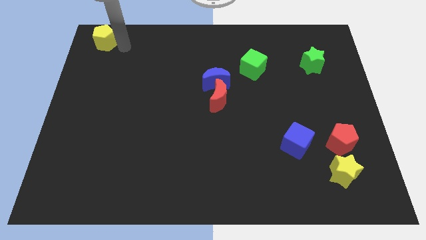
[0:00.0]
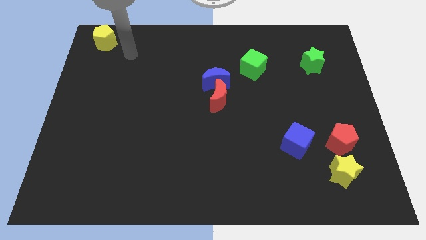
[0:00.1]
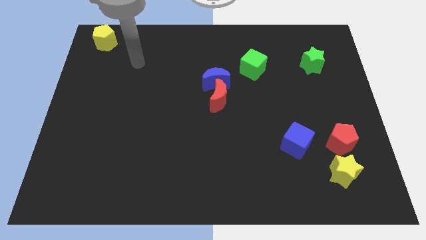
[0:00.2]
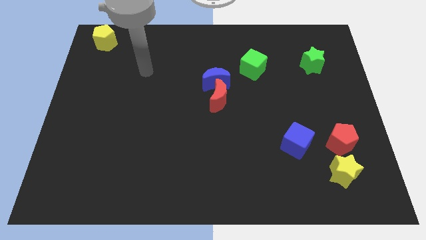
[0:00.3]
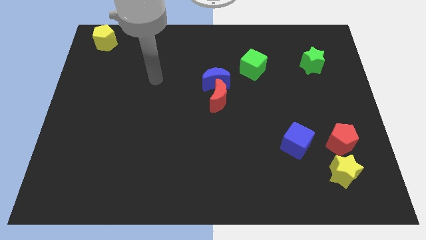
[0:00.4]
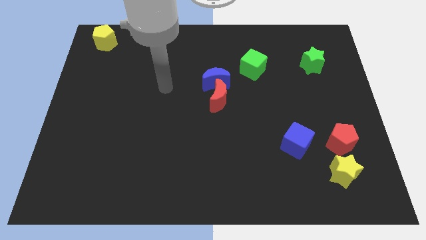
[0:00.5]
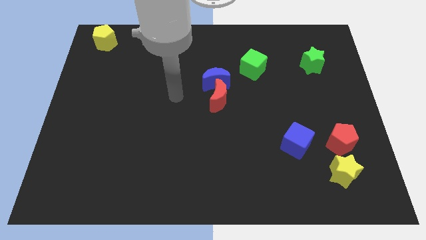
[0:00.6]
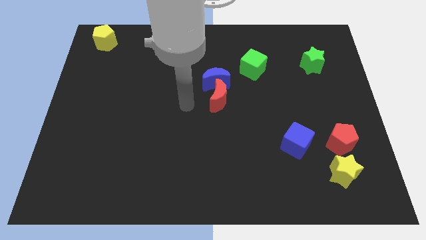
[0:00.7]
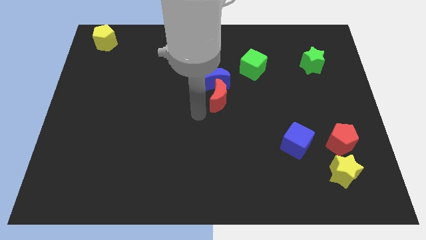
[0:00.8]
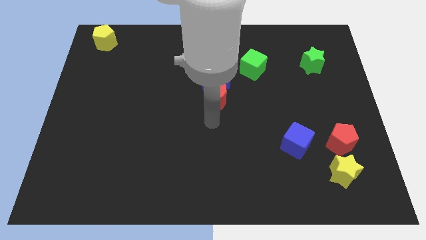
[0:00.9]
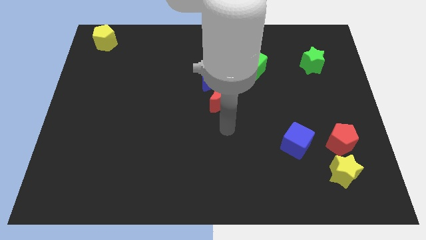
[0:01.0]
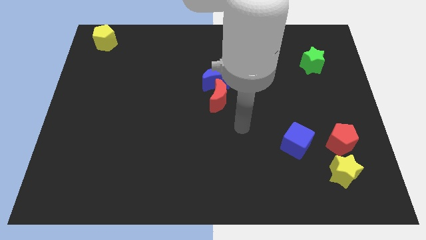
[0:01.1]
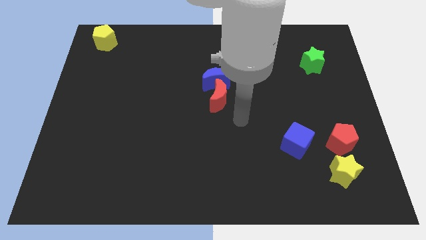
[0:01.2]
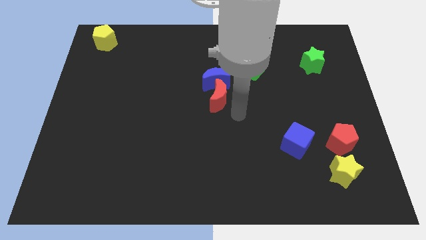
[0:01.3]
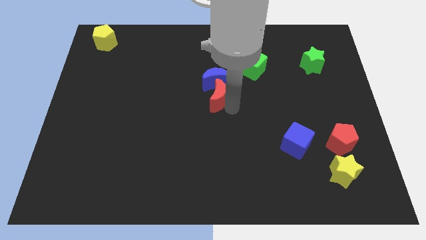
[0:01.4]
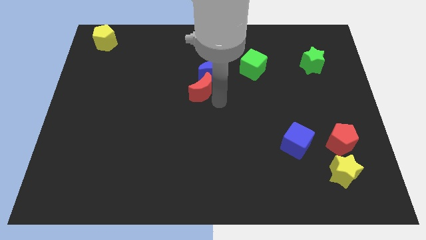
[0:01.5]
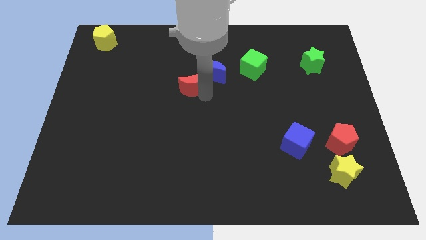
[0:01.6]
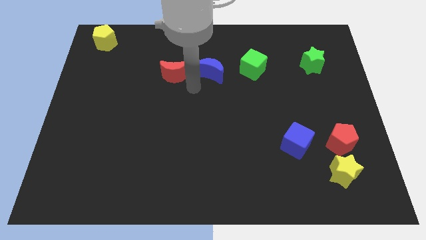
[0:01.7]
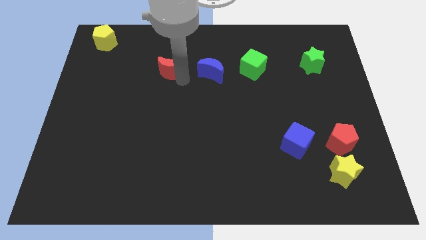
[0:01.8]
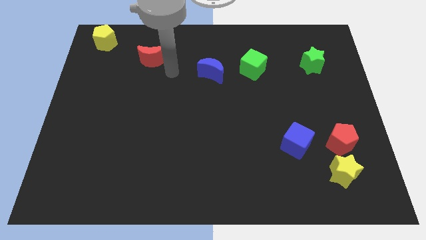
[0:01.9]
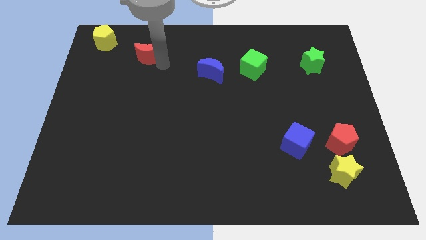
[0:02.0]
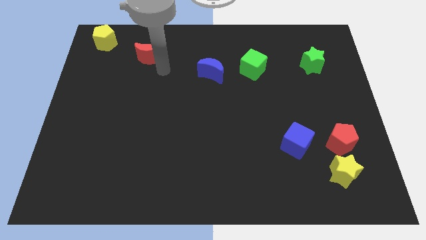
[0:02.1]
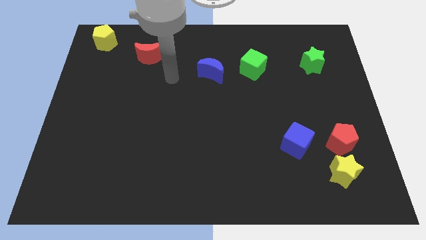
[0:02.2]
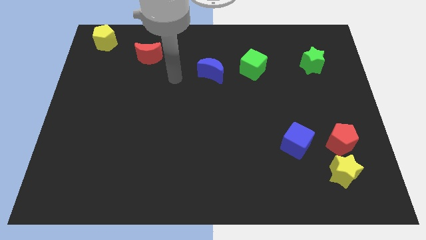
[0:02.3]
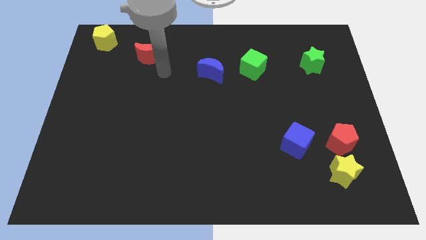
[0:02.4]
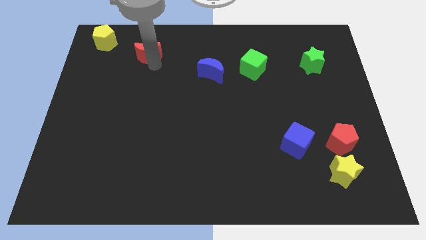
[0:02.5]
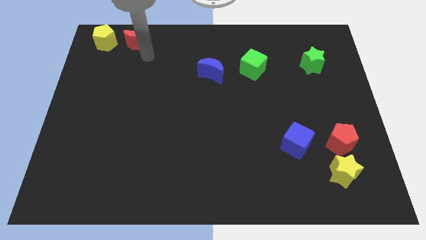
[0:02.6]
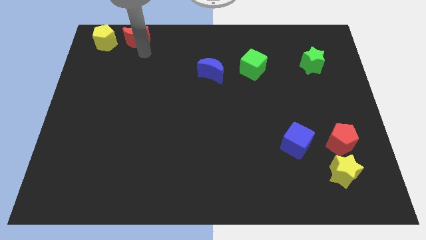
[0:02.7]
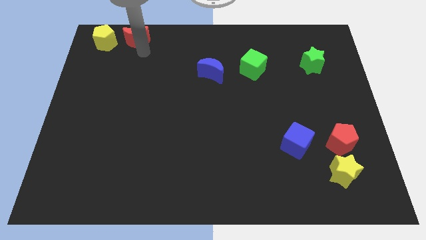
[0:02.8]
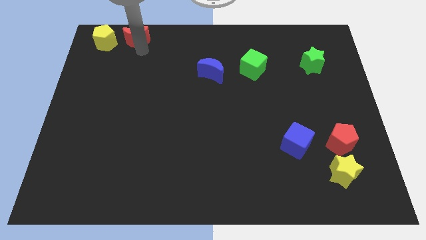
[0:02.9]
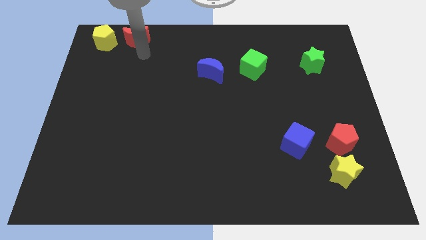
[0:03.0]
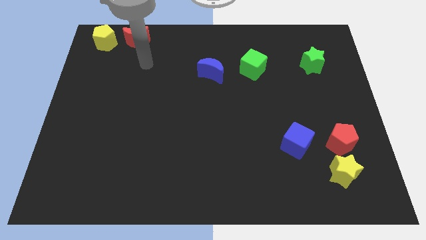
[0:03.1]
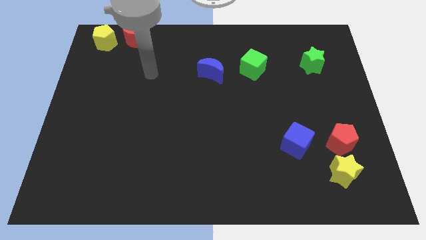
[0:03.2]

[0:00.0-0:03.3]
place the red moon horizontally at the right side of the yellow pentagon

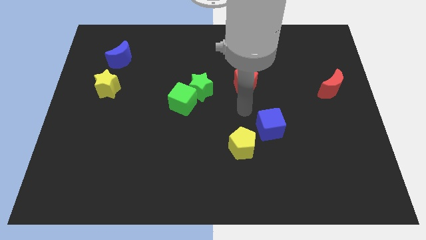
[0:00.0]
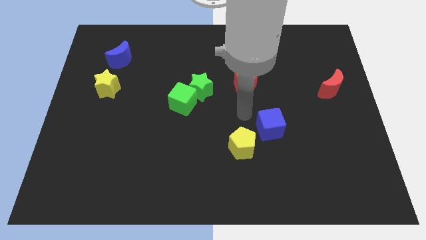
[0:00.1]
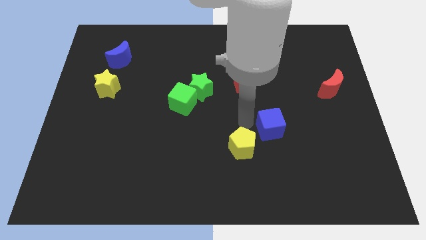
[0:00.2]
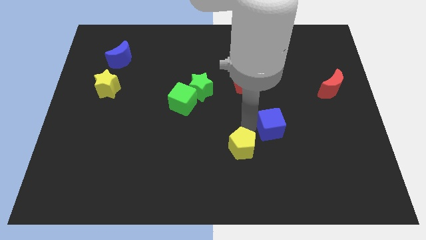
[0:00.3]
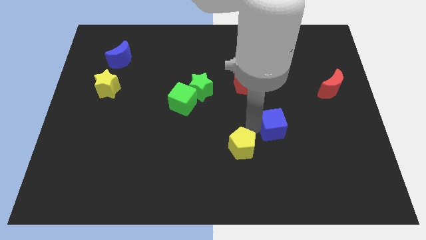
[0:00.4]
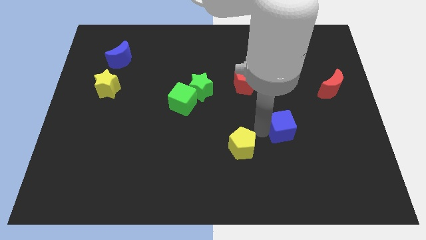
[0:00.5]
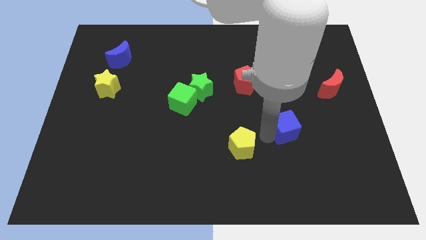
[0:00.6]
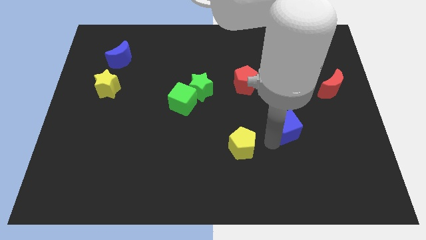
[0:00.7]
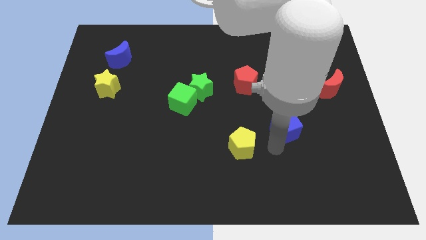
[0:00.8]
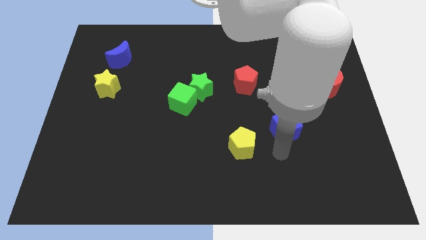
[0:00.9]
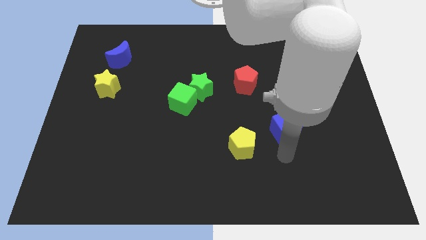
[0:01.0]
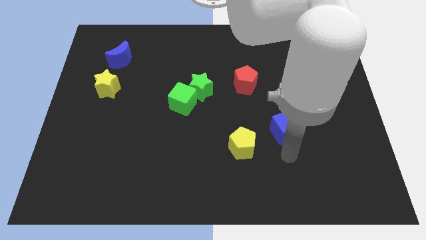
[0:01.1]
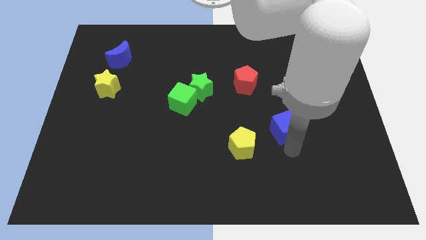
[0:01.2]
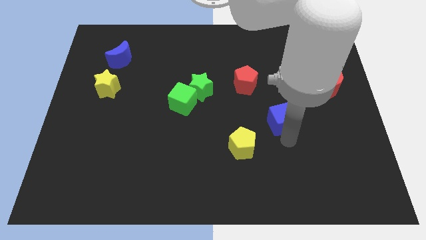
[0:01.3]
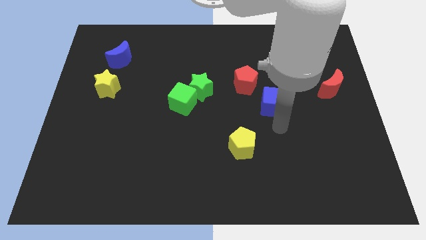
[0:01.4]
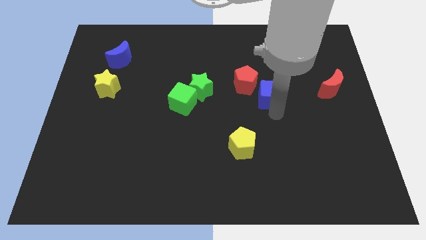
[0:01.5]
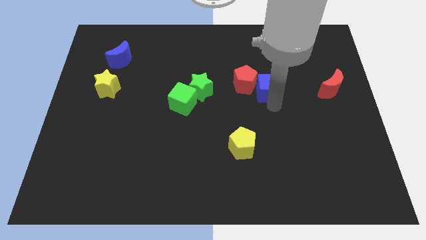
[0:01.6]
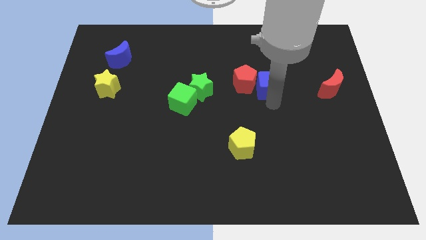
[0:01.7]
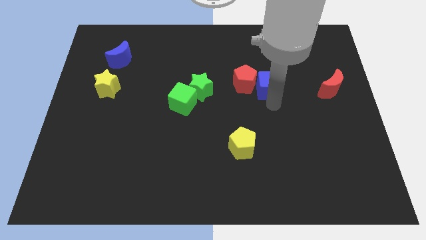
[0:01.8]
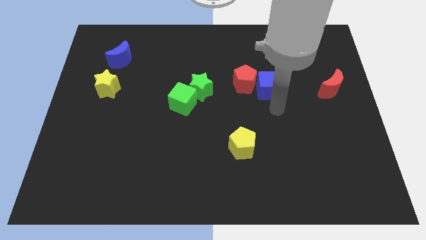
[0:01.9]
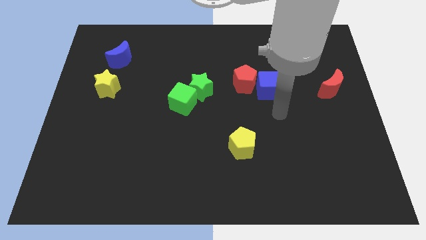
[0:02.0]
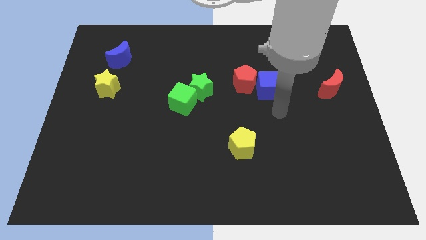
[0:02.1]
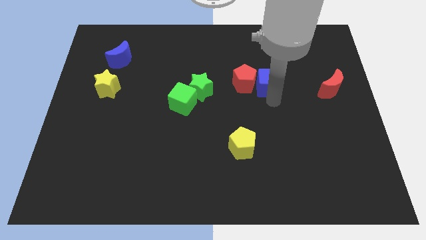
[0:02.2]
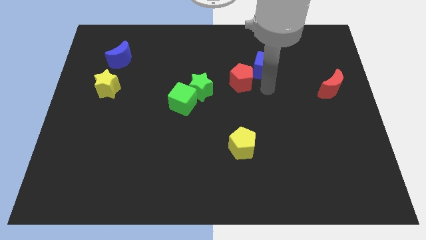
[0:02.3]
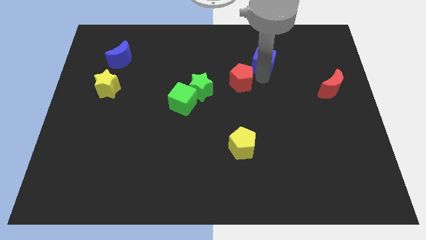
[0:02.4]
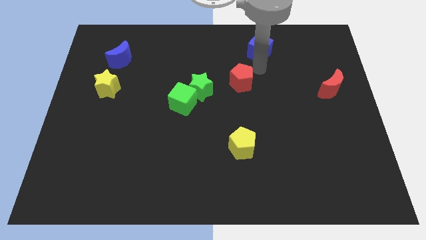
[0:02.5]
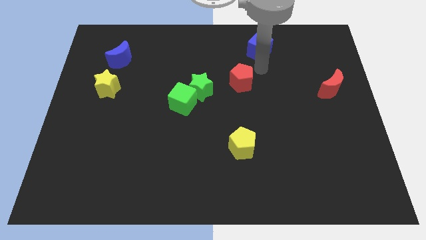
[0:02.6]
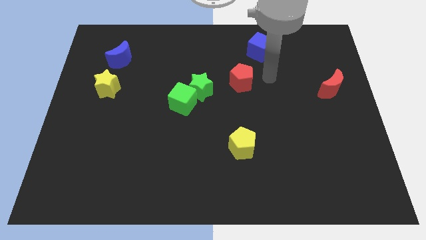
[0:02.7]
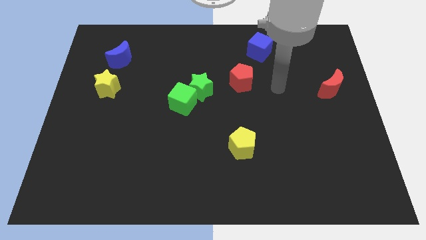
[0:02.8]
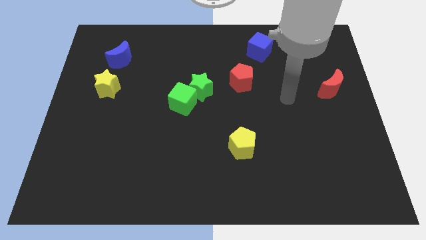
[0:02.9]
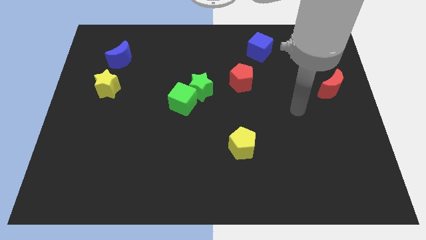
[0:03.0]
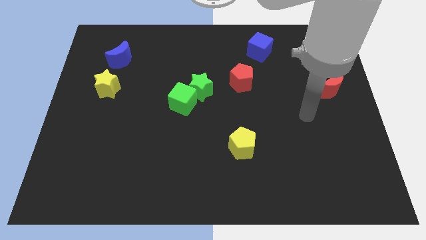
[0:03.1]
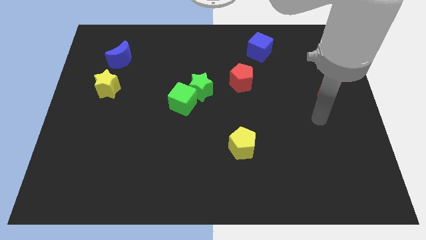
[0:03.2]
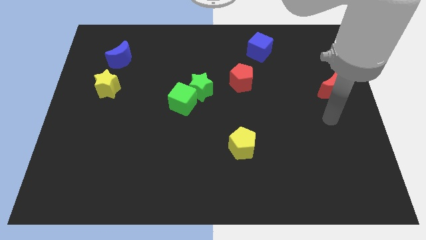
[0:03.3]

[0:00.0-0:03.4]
push the blue cube to the top of the board

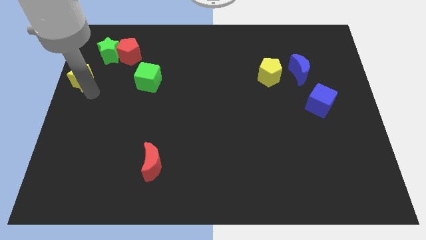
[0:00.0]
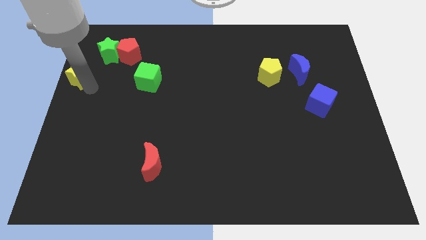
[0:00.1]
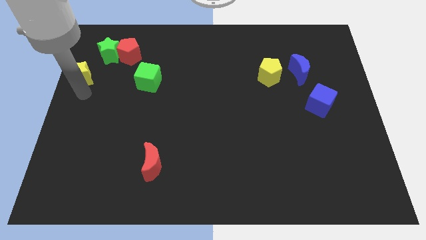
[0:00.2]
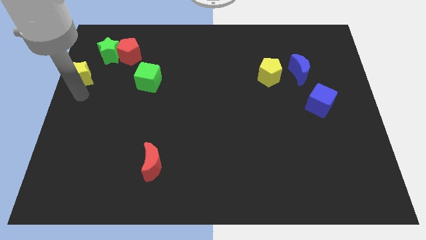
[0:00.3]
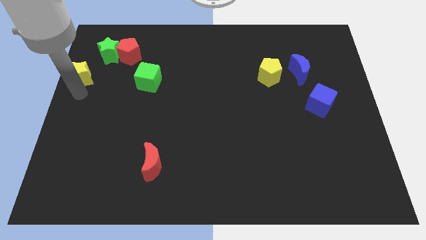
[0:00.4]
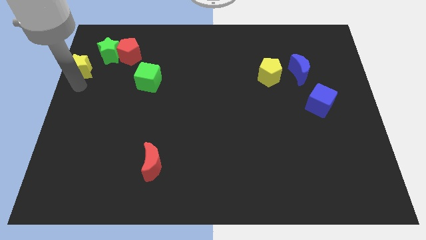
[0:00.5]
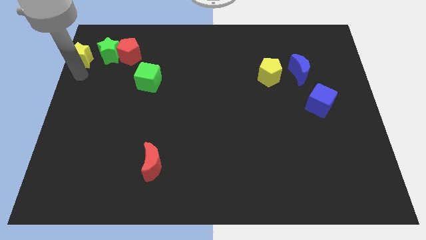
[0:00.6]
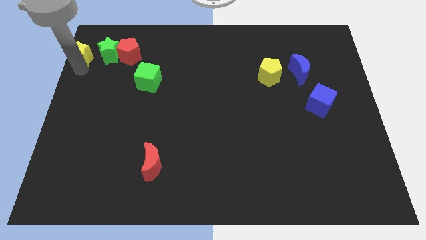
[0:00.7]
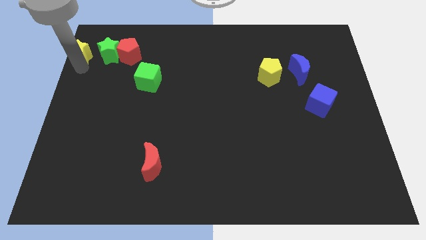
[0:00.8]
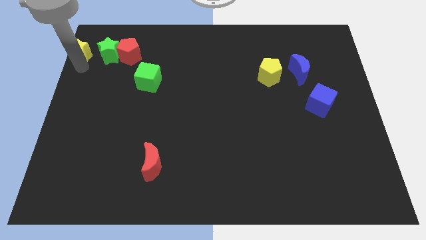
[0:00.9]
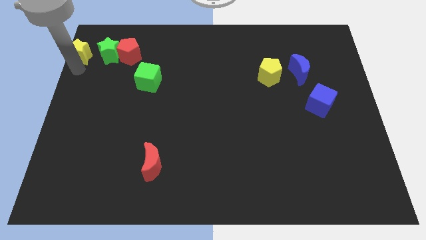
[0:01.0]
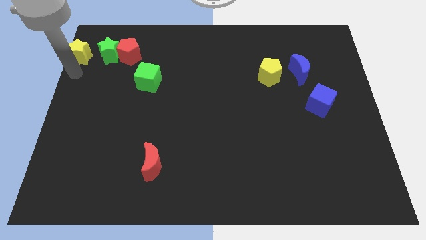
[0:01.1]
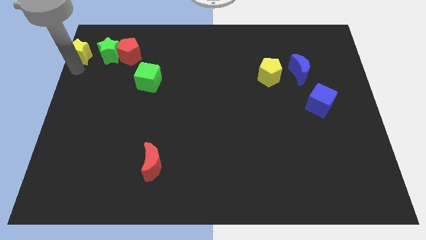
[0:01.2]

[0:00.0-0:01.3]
push the yellow star at the left side of the green star

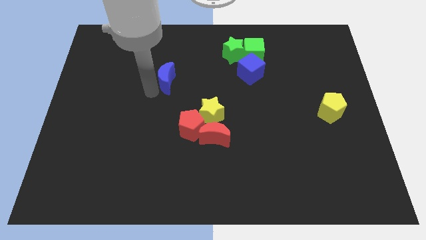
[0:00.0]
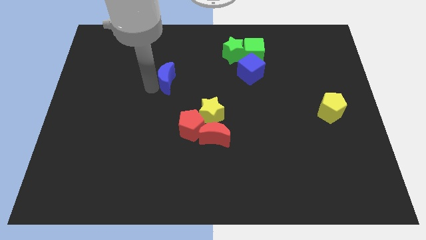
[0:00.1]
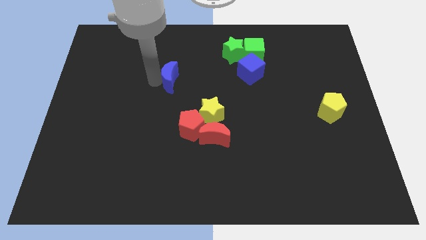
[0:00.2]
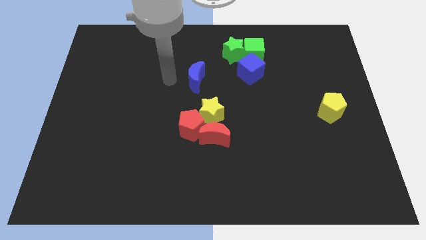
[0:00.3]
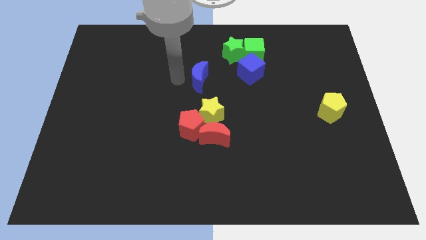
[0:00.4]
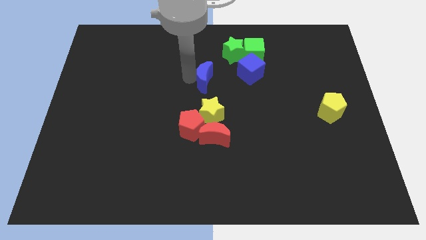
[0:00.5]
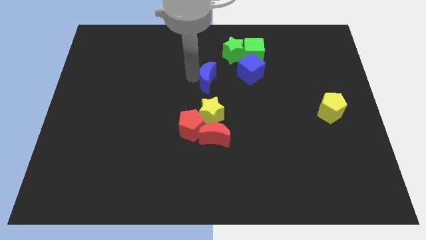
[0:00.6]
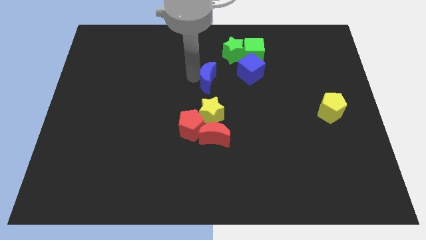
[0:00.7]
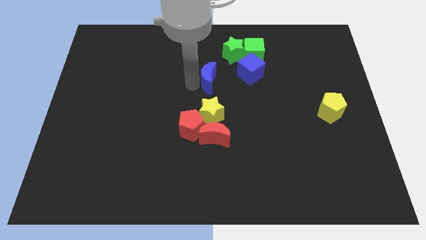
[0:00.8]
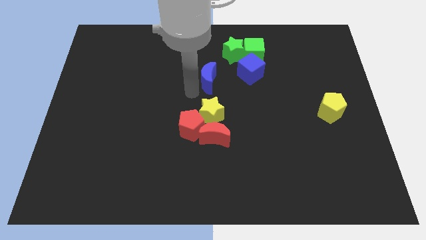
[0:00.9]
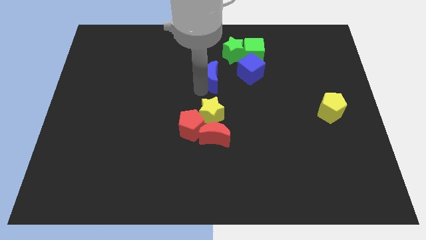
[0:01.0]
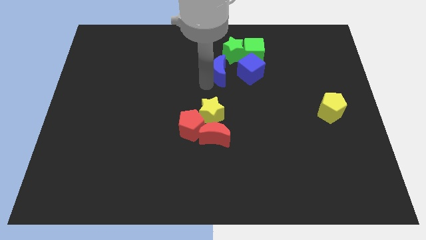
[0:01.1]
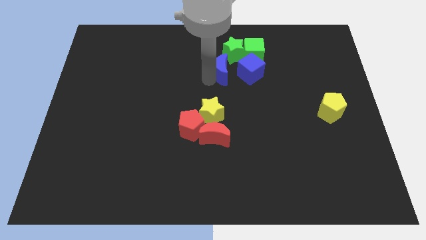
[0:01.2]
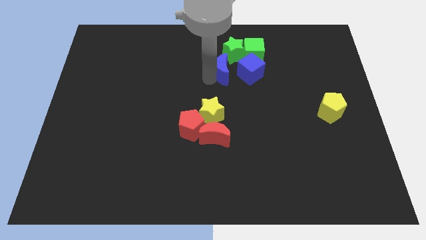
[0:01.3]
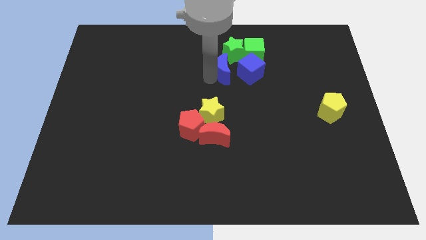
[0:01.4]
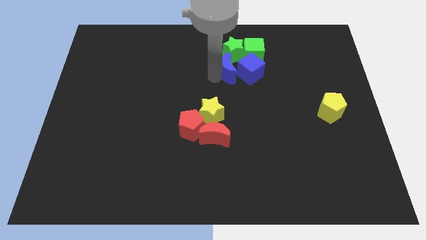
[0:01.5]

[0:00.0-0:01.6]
move the blue crescent left to the blue cube
